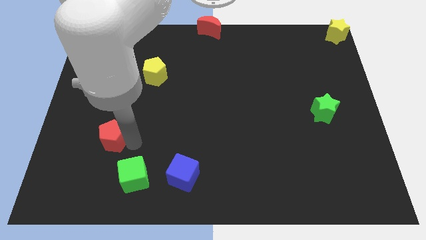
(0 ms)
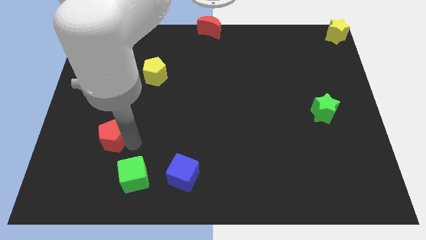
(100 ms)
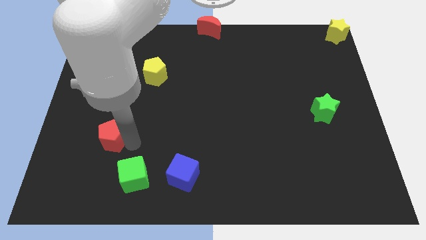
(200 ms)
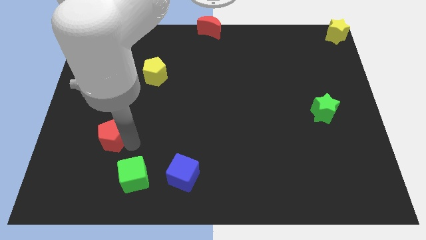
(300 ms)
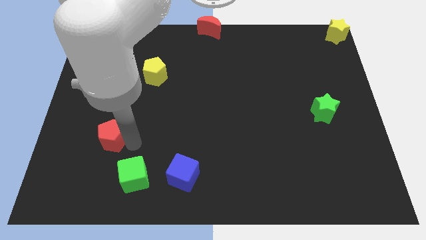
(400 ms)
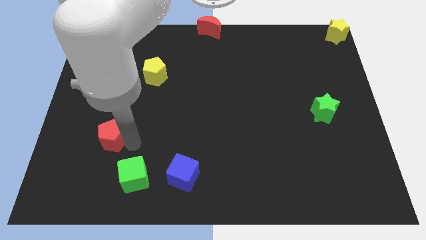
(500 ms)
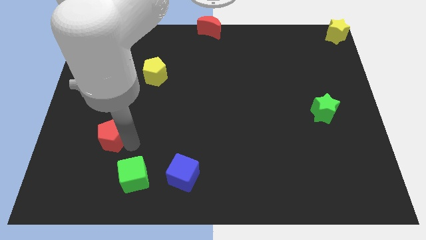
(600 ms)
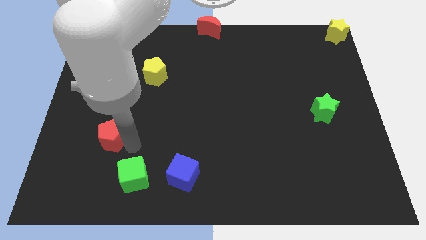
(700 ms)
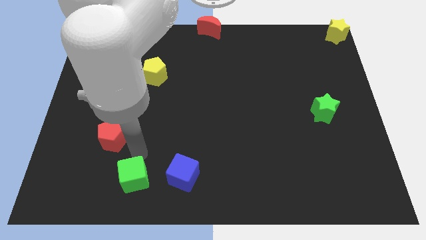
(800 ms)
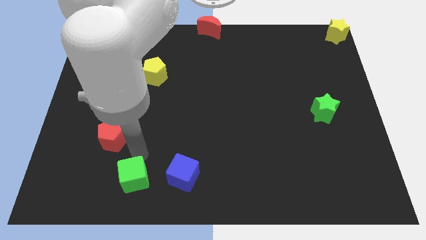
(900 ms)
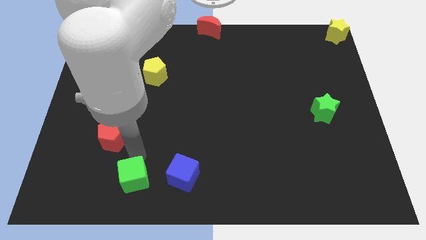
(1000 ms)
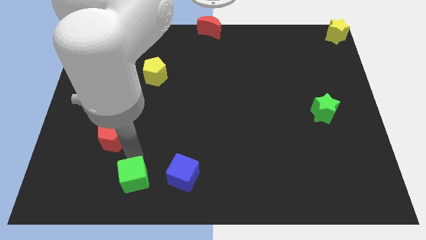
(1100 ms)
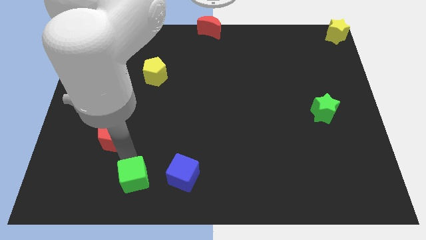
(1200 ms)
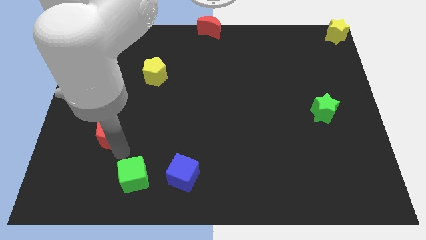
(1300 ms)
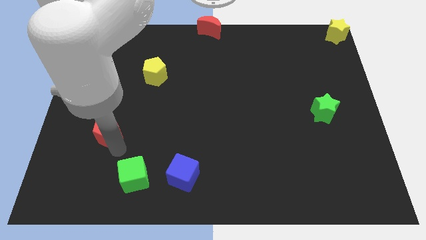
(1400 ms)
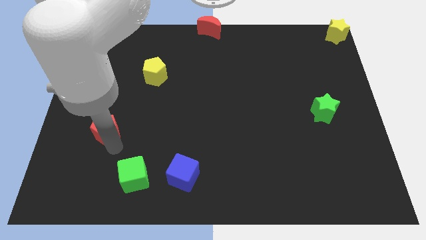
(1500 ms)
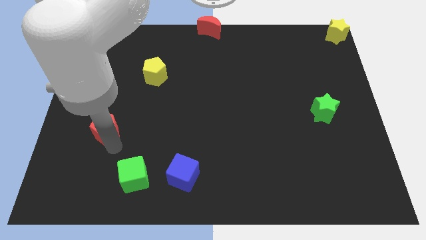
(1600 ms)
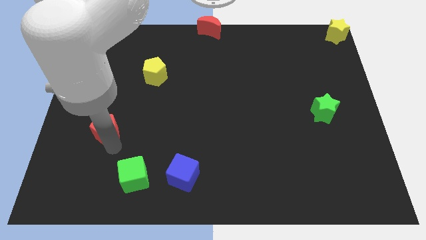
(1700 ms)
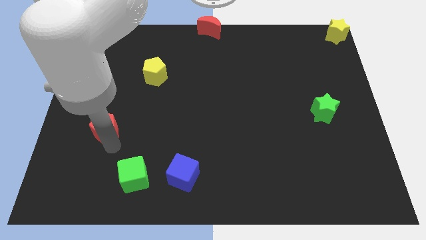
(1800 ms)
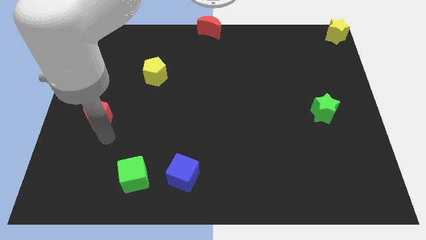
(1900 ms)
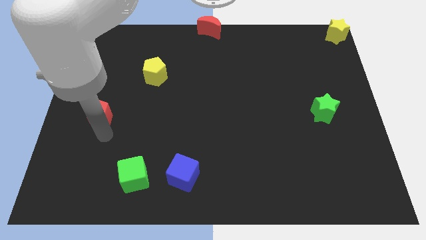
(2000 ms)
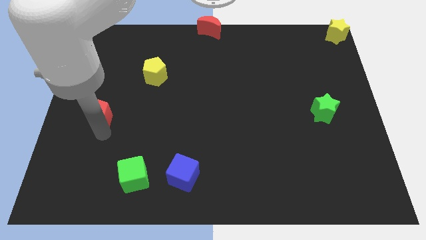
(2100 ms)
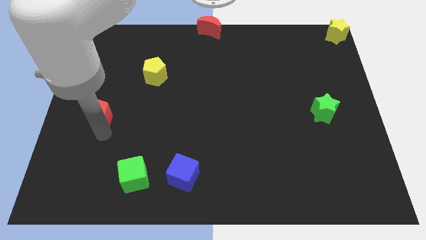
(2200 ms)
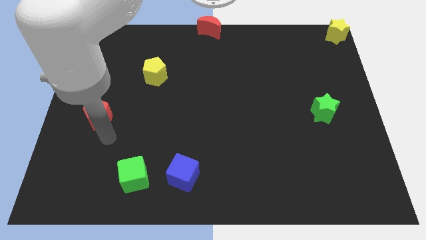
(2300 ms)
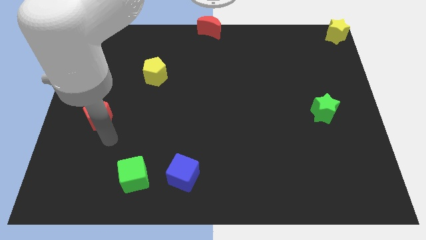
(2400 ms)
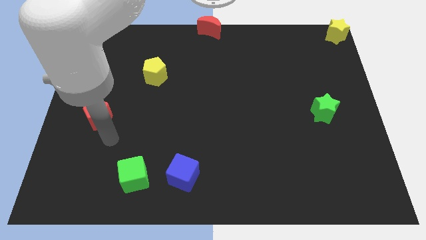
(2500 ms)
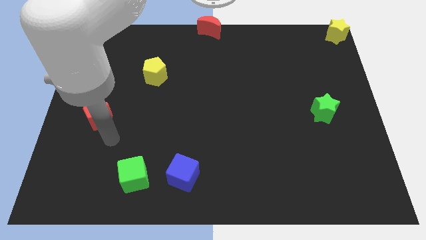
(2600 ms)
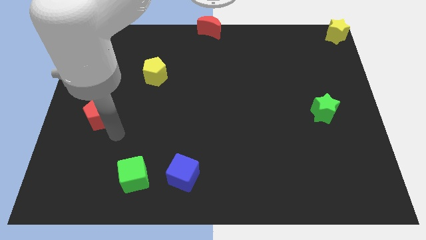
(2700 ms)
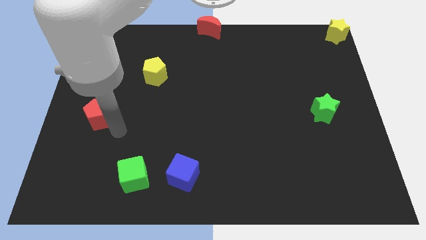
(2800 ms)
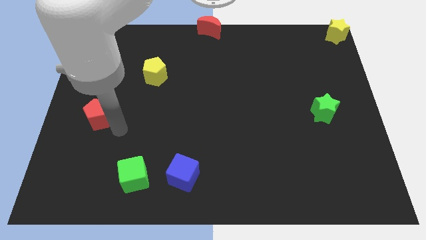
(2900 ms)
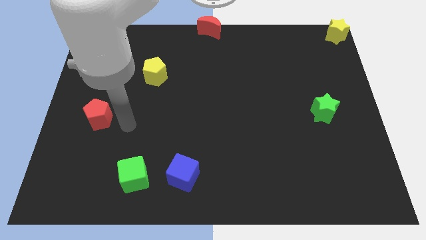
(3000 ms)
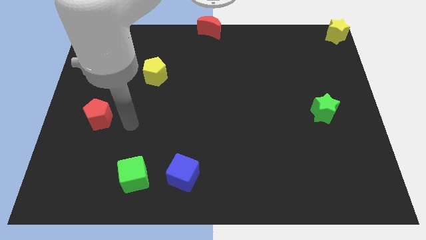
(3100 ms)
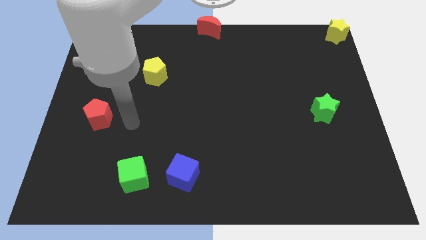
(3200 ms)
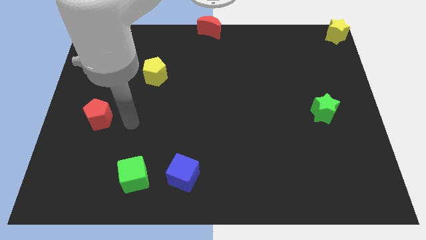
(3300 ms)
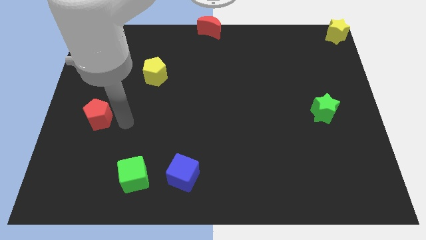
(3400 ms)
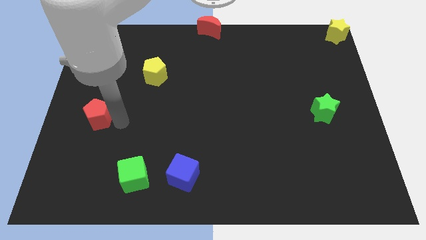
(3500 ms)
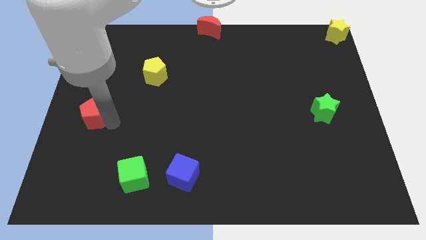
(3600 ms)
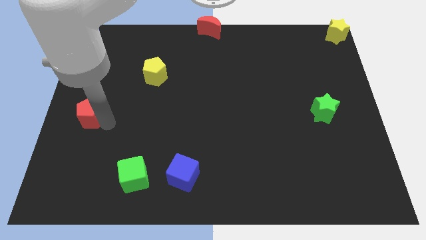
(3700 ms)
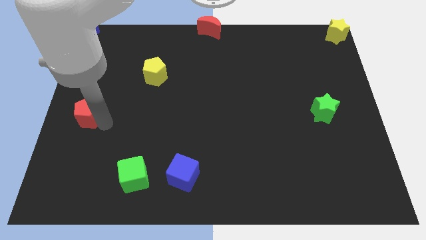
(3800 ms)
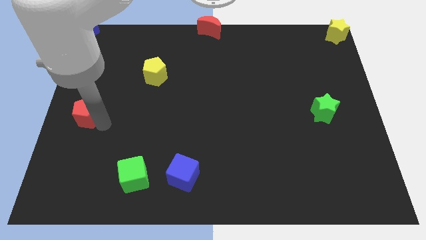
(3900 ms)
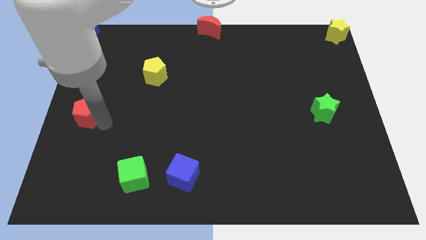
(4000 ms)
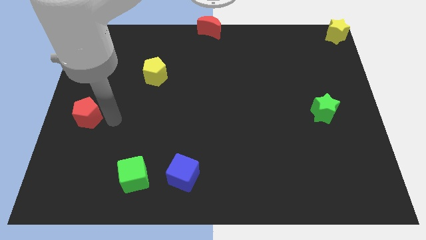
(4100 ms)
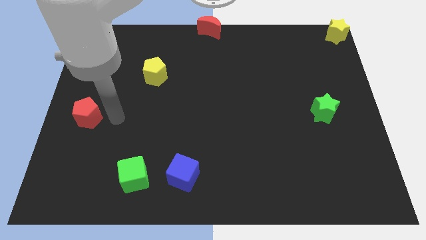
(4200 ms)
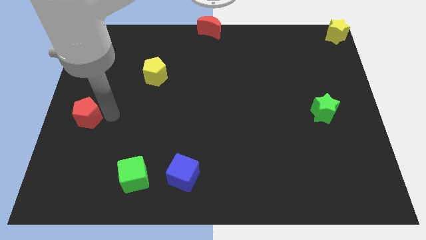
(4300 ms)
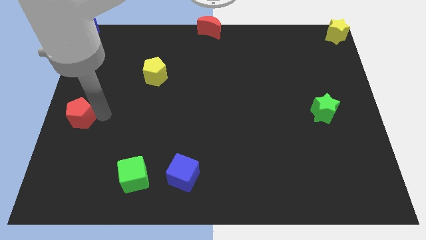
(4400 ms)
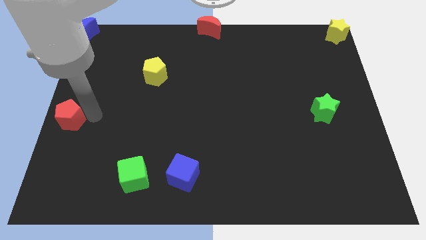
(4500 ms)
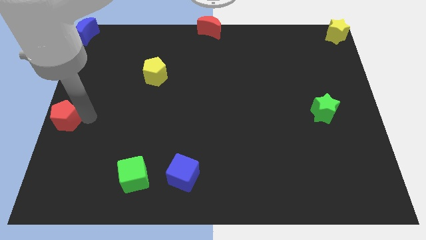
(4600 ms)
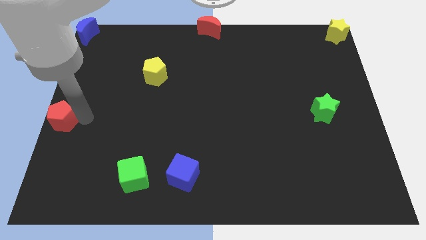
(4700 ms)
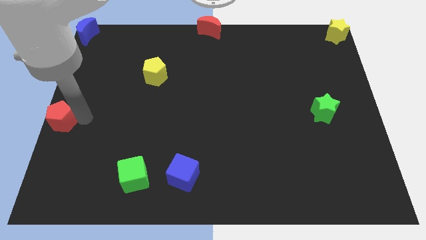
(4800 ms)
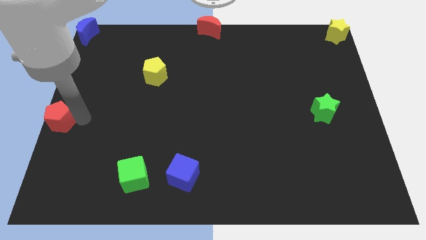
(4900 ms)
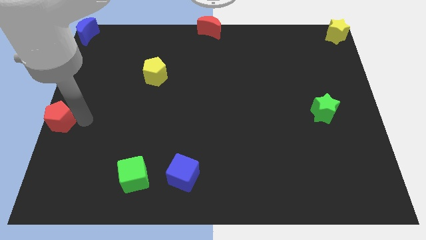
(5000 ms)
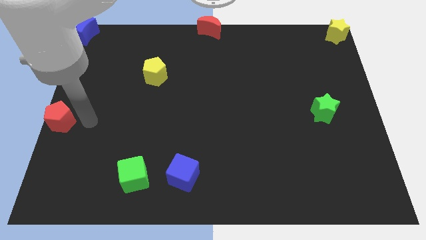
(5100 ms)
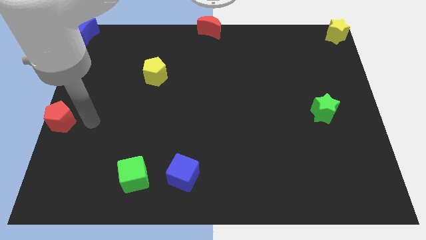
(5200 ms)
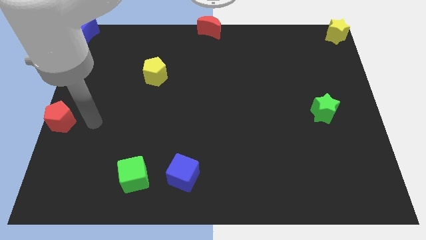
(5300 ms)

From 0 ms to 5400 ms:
put the red pentagon at the center left corner

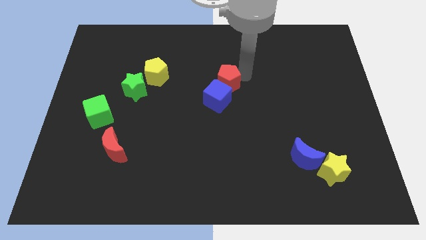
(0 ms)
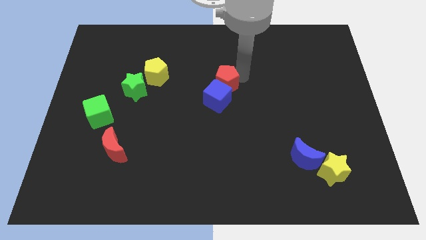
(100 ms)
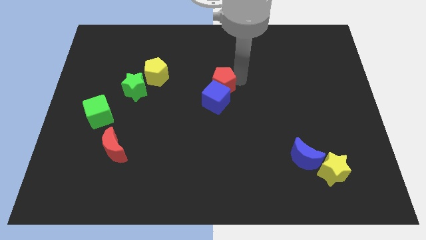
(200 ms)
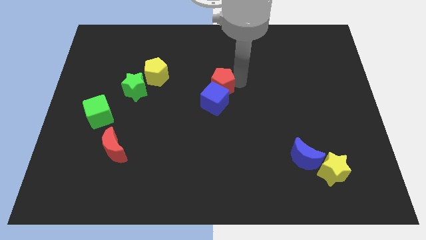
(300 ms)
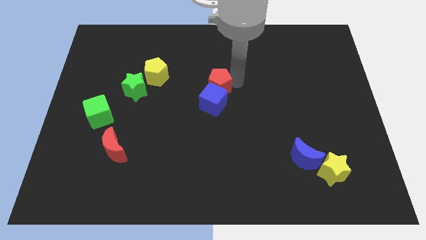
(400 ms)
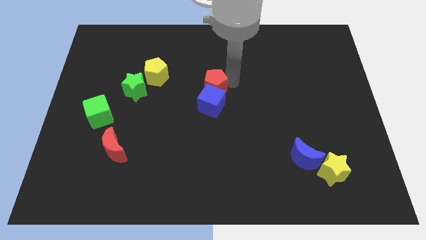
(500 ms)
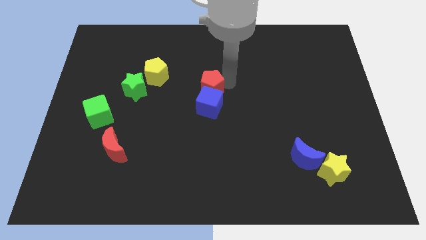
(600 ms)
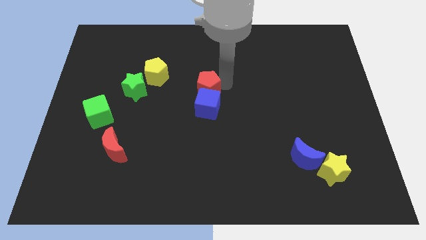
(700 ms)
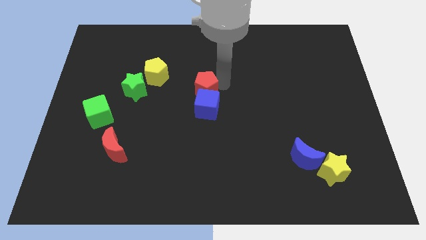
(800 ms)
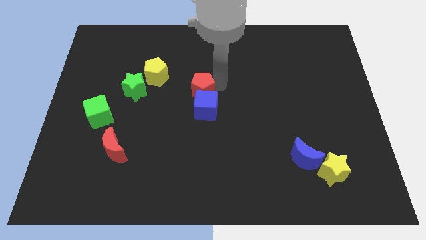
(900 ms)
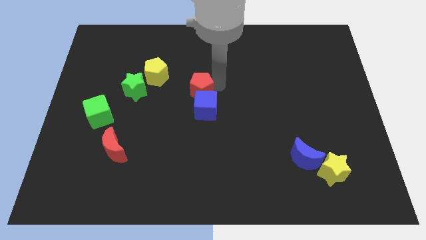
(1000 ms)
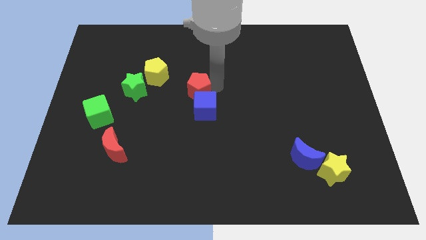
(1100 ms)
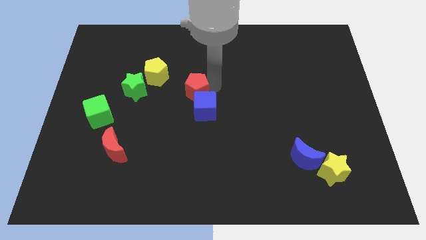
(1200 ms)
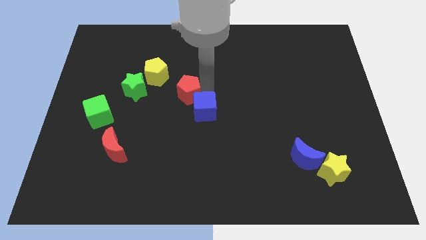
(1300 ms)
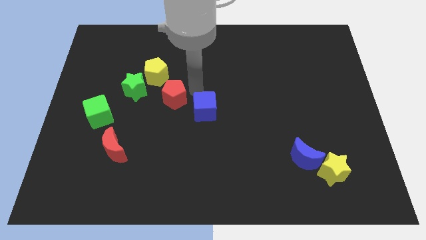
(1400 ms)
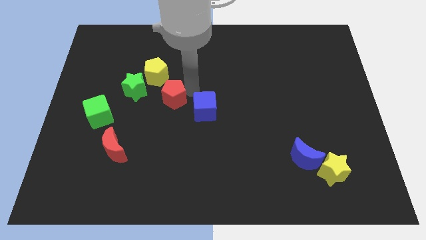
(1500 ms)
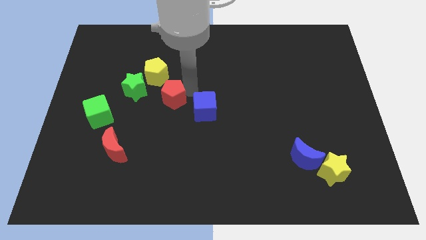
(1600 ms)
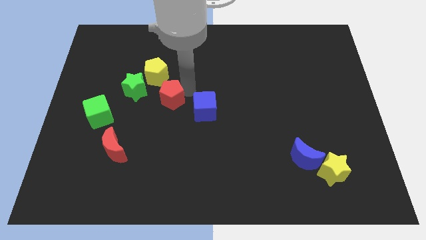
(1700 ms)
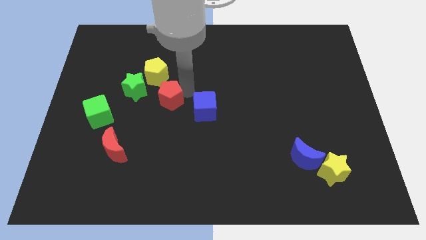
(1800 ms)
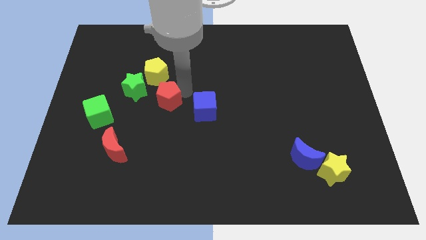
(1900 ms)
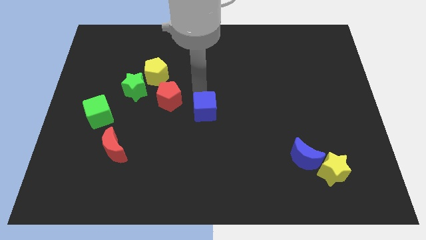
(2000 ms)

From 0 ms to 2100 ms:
move the red pentagon in between the green star and blue cube

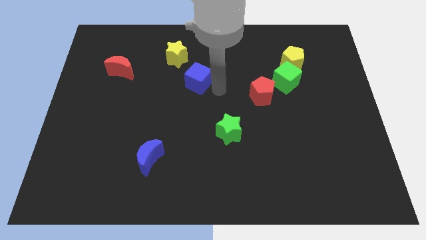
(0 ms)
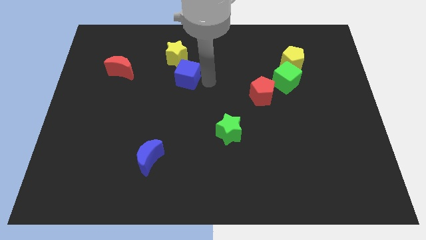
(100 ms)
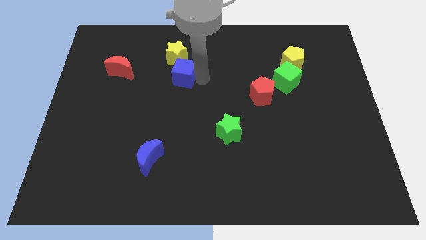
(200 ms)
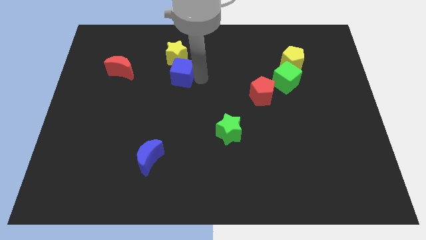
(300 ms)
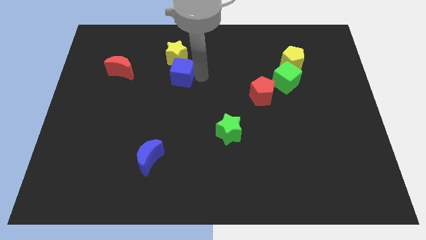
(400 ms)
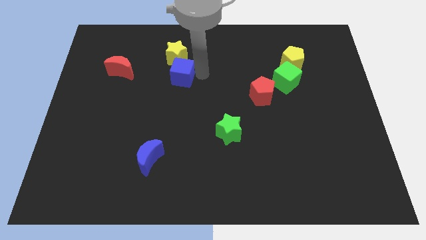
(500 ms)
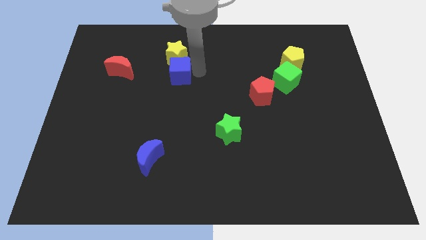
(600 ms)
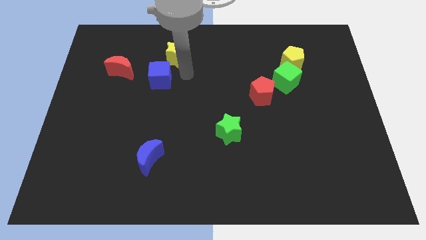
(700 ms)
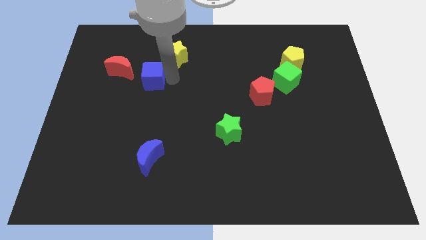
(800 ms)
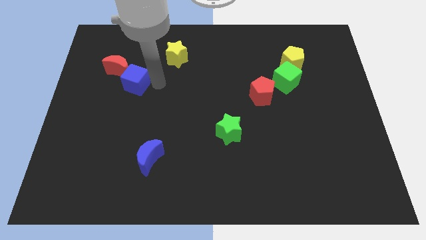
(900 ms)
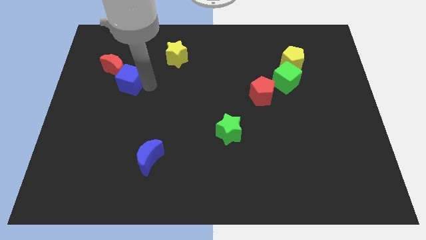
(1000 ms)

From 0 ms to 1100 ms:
move blue cube into red moon

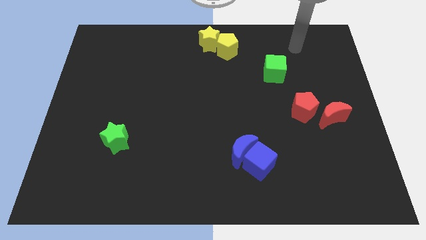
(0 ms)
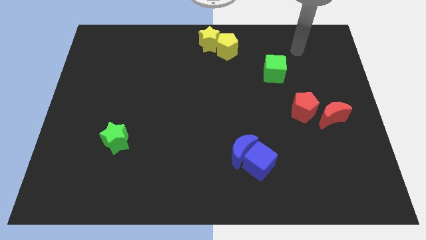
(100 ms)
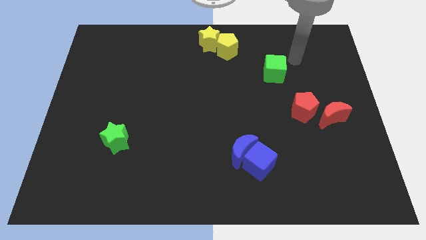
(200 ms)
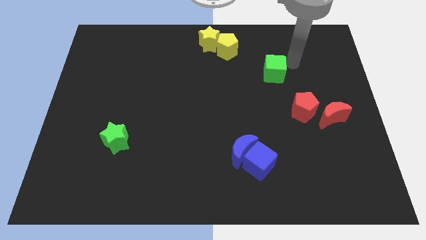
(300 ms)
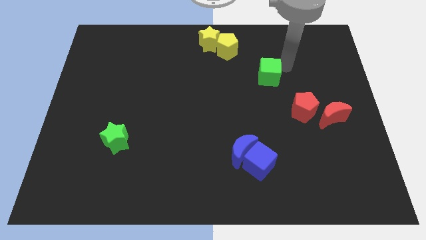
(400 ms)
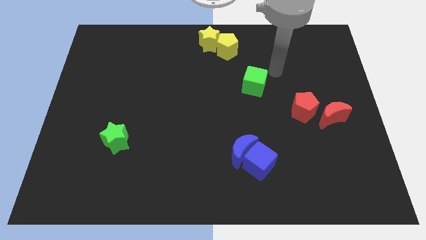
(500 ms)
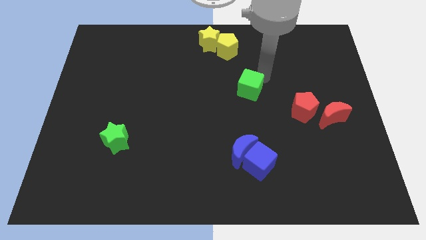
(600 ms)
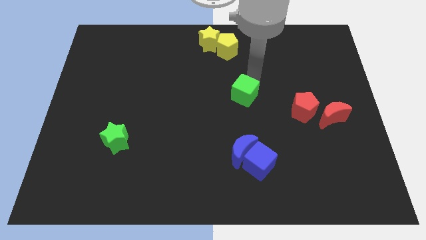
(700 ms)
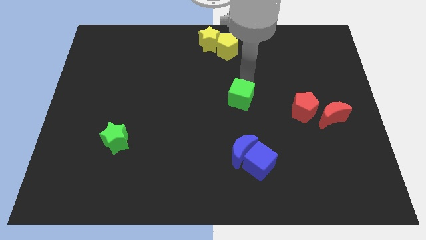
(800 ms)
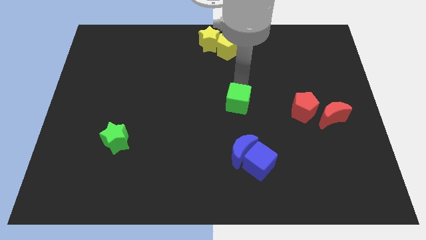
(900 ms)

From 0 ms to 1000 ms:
move the green cube in a diagonal to green star
